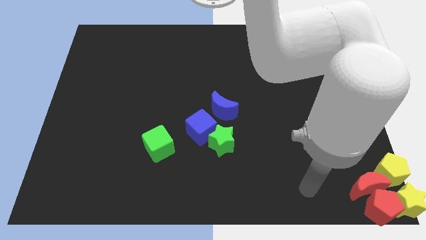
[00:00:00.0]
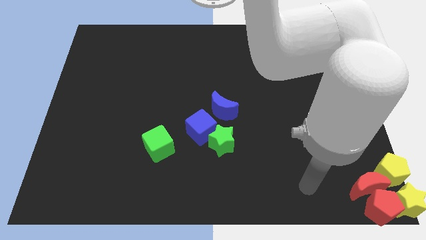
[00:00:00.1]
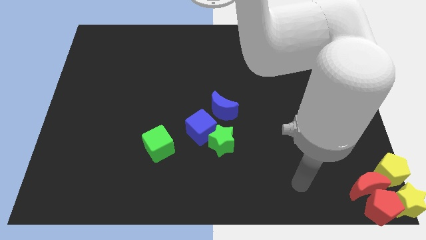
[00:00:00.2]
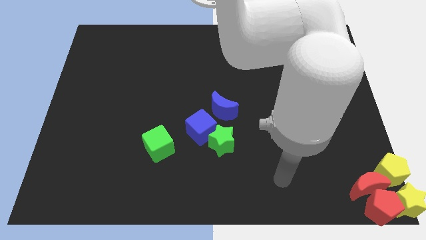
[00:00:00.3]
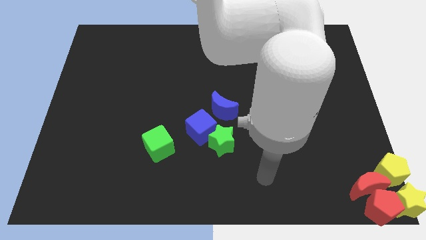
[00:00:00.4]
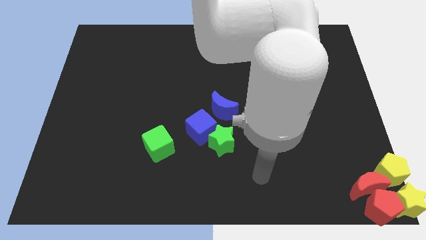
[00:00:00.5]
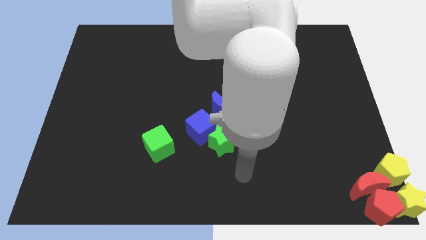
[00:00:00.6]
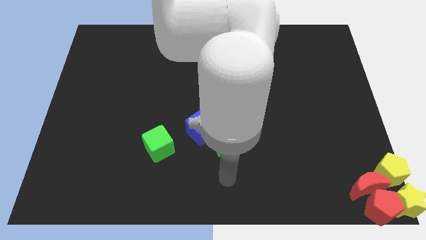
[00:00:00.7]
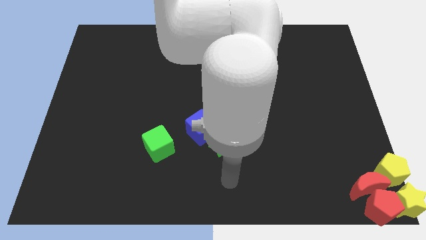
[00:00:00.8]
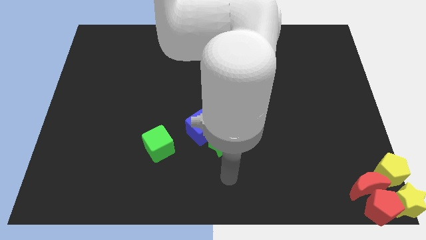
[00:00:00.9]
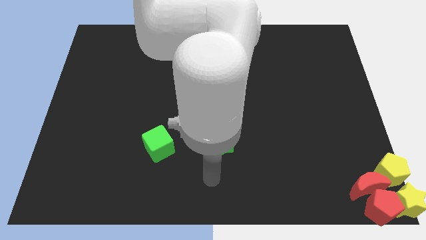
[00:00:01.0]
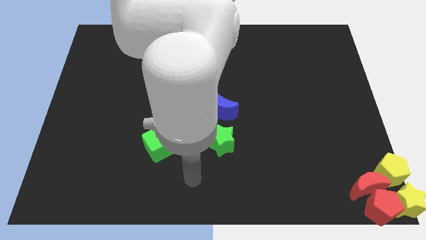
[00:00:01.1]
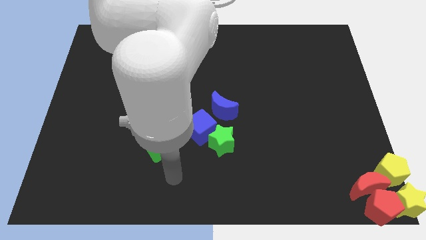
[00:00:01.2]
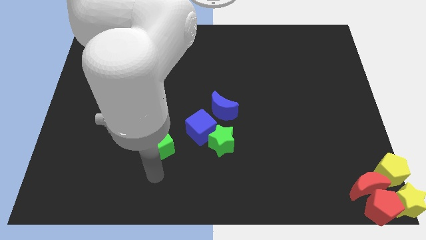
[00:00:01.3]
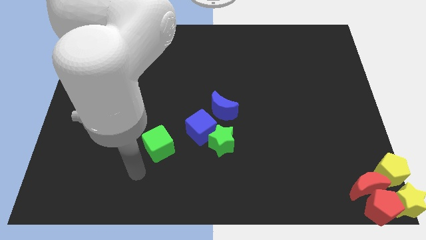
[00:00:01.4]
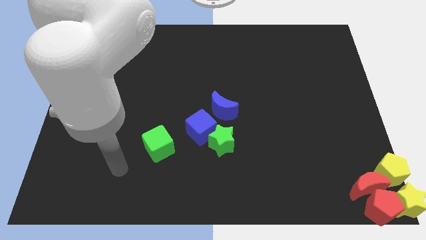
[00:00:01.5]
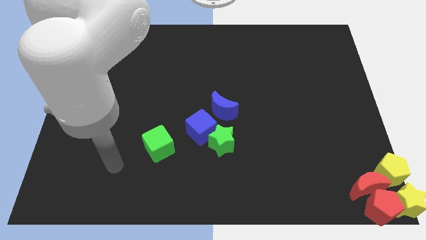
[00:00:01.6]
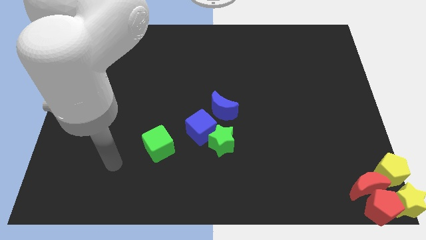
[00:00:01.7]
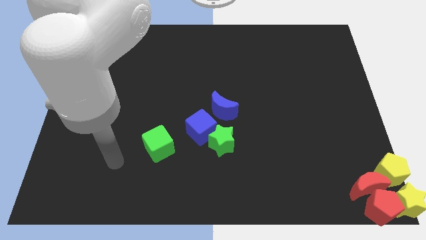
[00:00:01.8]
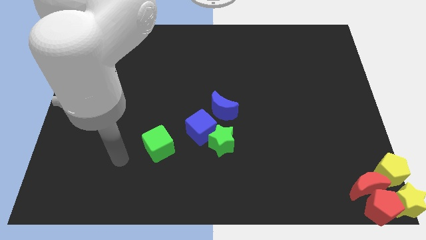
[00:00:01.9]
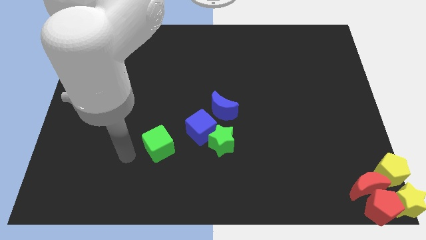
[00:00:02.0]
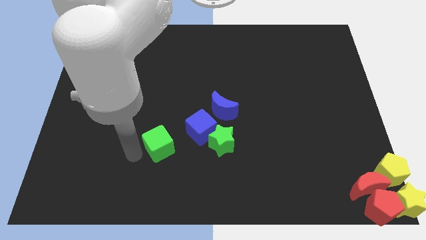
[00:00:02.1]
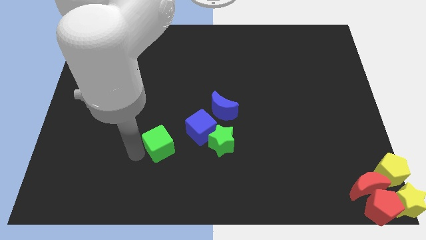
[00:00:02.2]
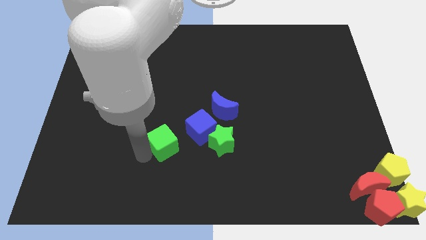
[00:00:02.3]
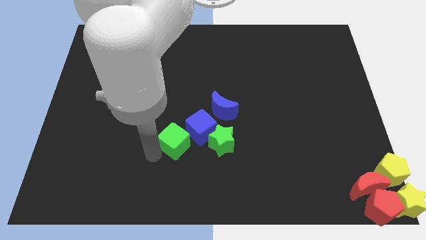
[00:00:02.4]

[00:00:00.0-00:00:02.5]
push the green cube towards the blue cube

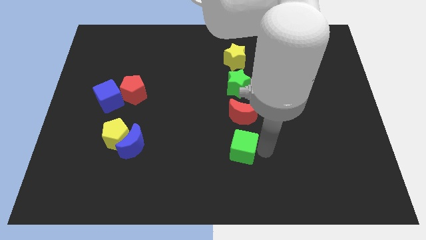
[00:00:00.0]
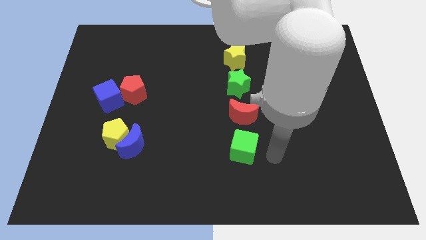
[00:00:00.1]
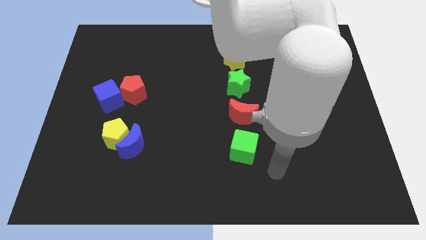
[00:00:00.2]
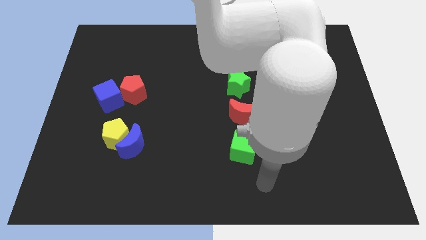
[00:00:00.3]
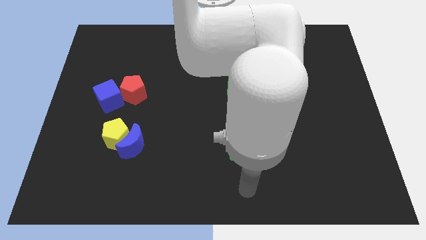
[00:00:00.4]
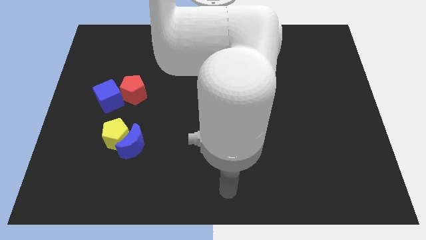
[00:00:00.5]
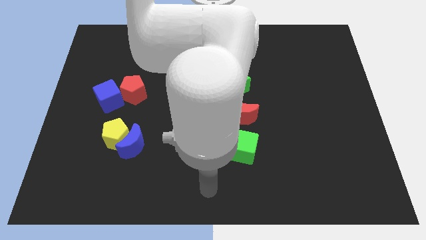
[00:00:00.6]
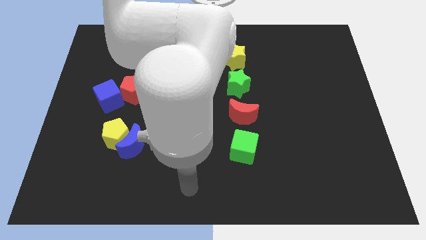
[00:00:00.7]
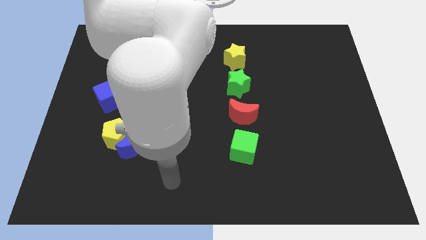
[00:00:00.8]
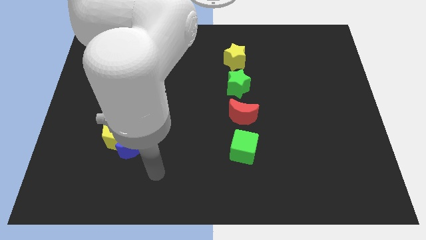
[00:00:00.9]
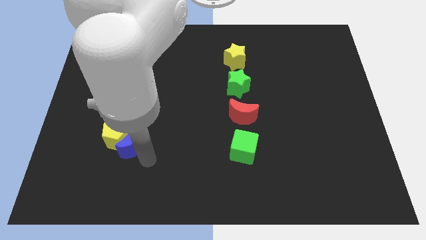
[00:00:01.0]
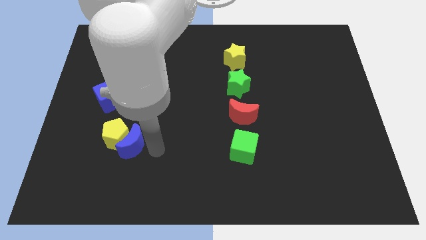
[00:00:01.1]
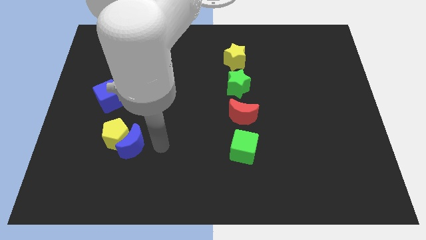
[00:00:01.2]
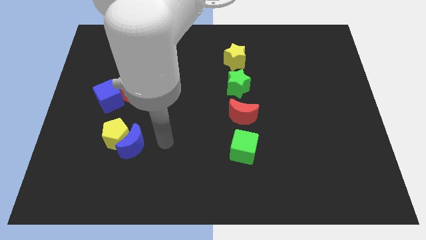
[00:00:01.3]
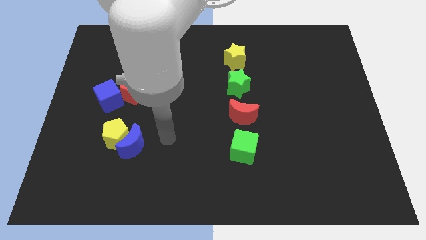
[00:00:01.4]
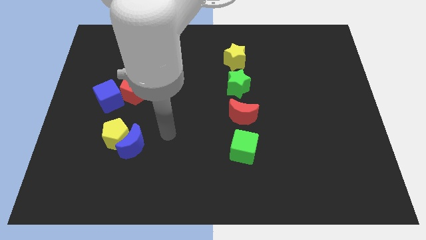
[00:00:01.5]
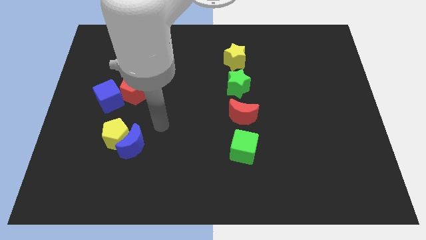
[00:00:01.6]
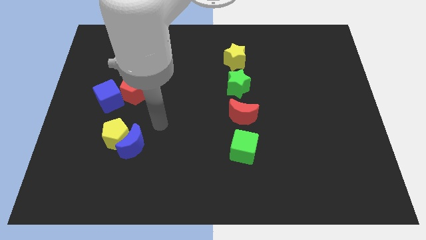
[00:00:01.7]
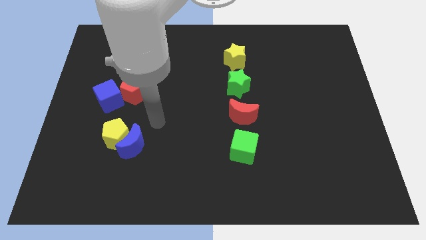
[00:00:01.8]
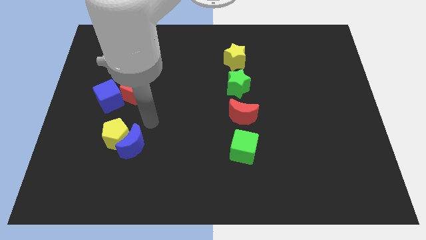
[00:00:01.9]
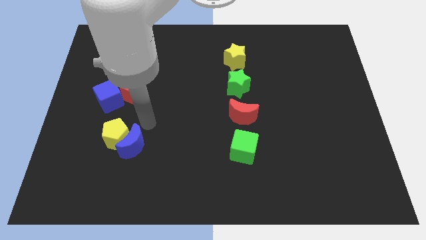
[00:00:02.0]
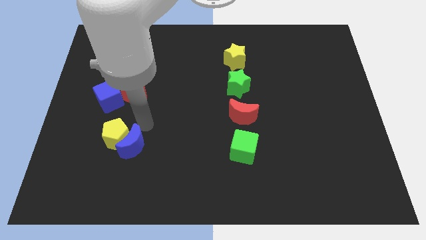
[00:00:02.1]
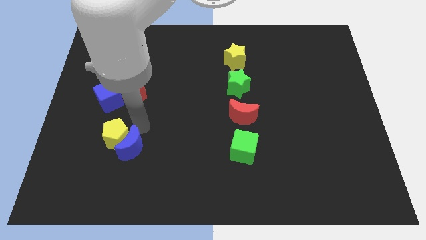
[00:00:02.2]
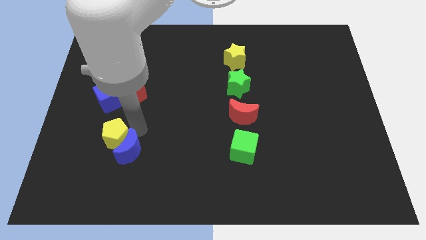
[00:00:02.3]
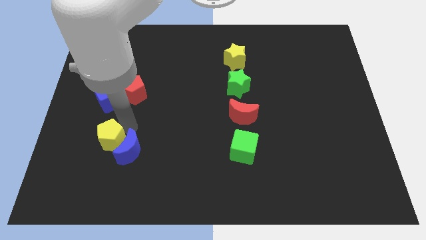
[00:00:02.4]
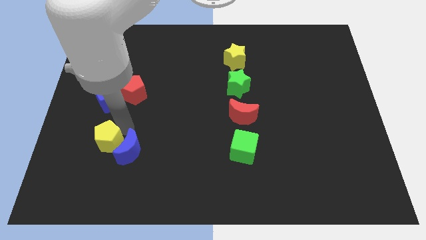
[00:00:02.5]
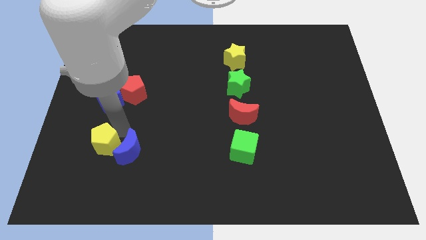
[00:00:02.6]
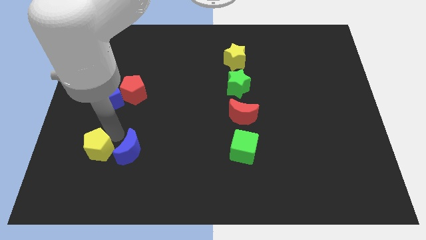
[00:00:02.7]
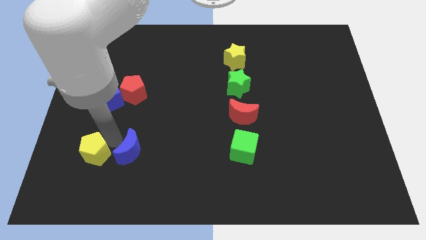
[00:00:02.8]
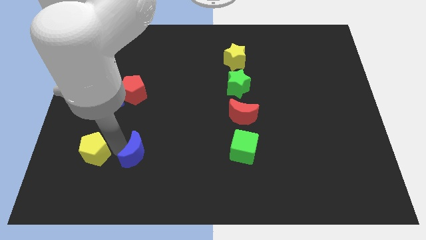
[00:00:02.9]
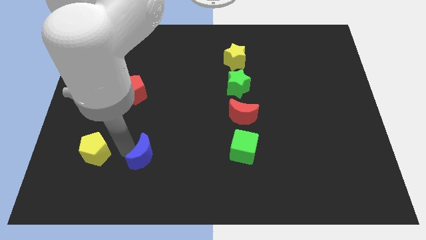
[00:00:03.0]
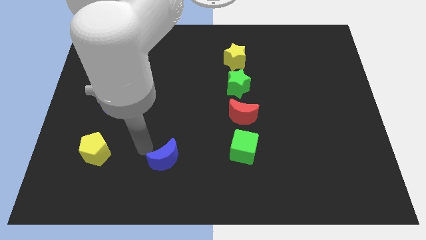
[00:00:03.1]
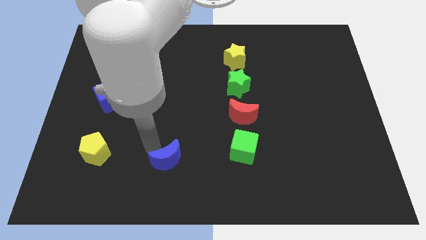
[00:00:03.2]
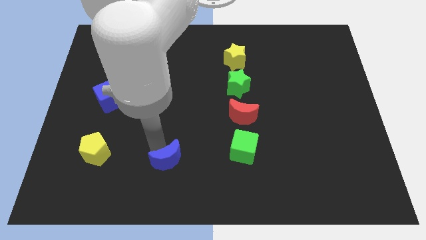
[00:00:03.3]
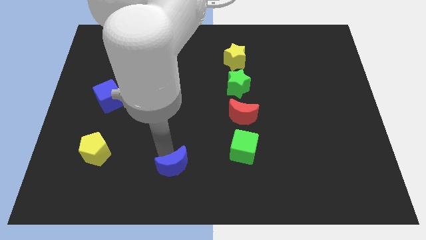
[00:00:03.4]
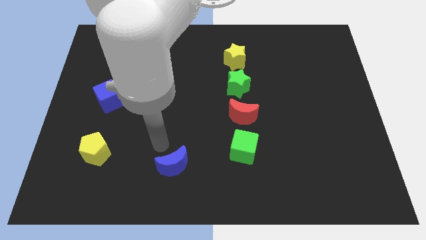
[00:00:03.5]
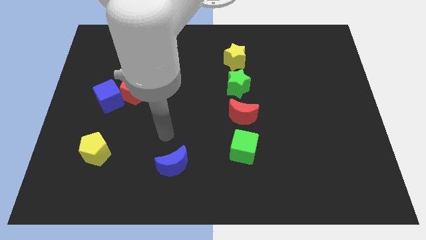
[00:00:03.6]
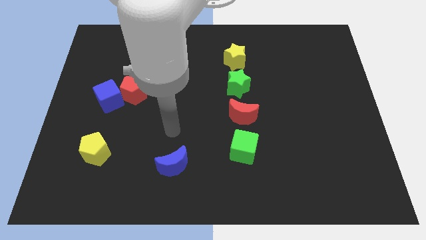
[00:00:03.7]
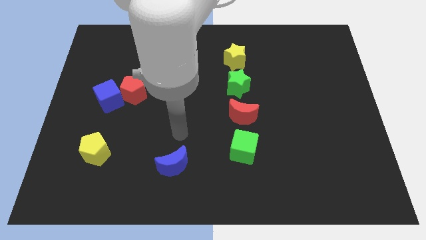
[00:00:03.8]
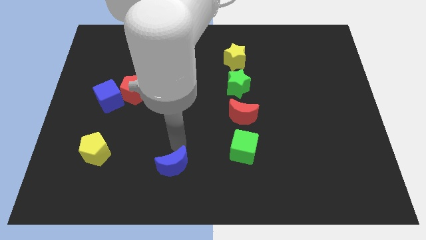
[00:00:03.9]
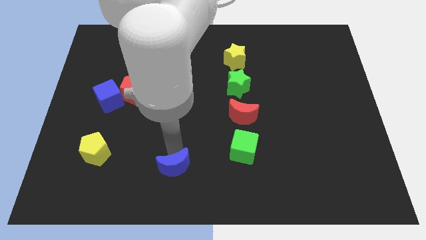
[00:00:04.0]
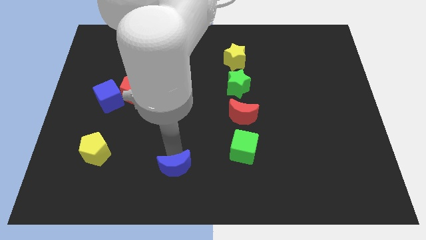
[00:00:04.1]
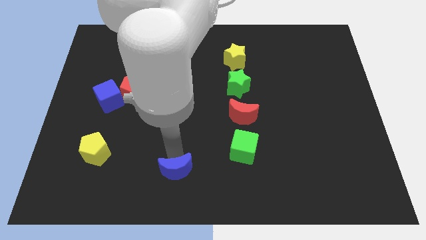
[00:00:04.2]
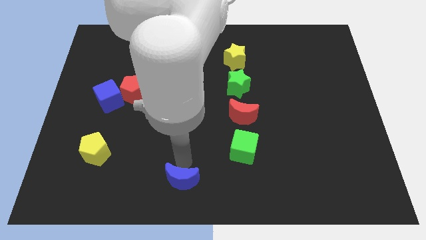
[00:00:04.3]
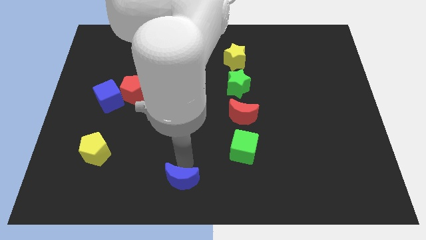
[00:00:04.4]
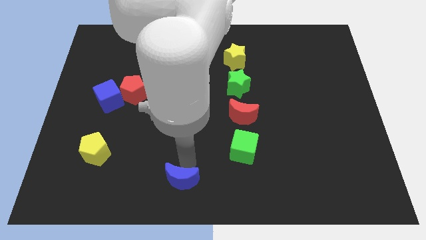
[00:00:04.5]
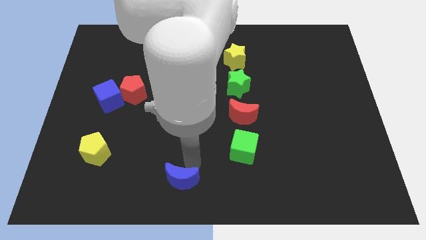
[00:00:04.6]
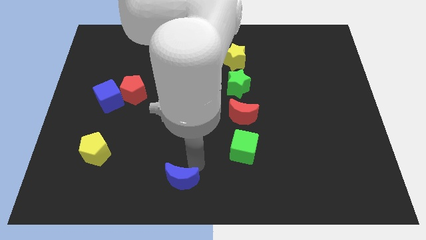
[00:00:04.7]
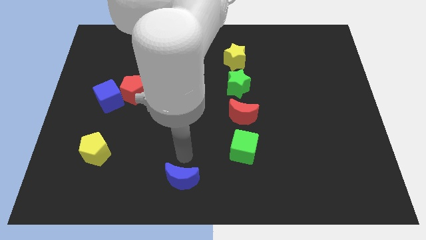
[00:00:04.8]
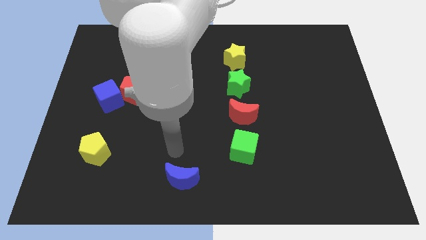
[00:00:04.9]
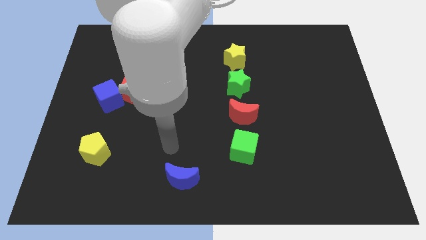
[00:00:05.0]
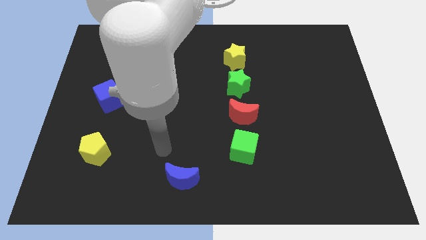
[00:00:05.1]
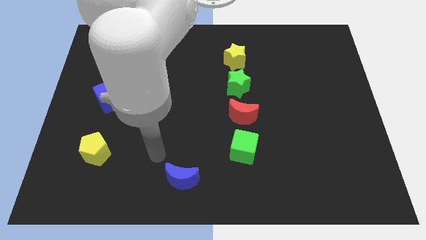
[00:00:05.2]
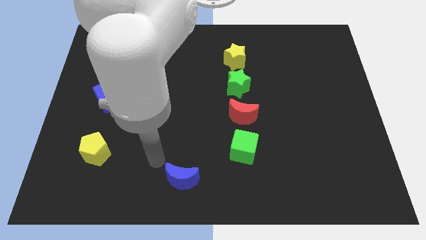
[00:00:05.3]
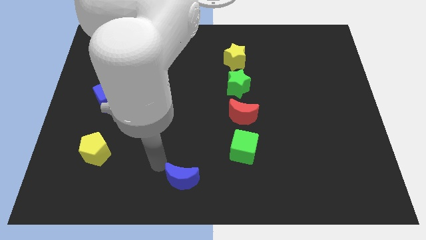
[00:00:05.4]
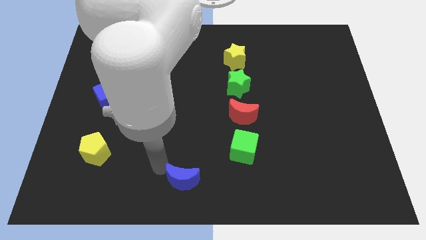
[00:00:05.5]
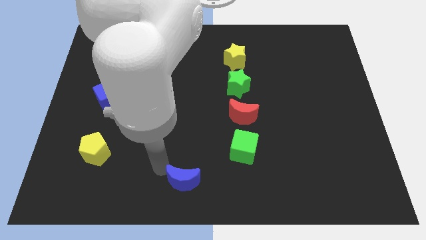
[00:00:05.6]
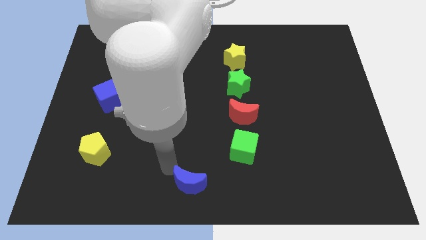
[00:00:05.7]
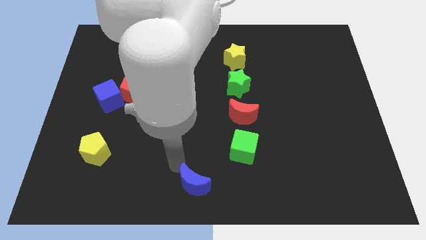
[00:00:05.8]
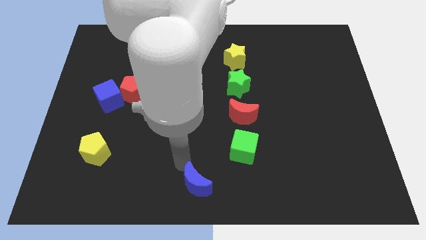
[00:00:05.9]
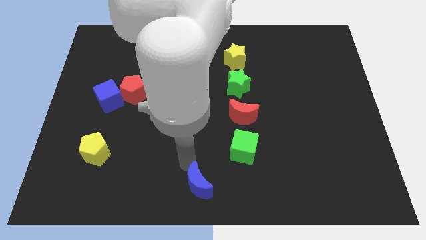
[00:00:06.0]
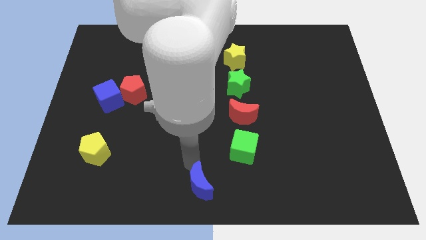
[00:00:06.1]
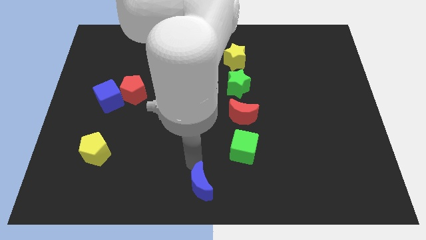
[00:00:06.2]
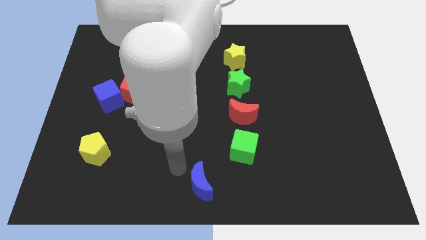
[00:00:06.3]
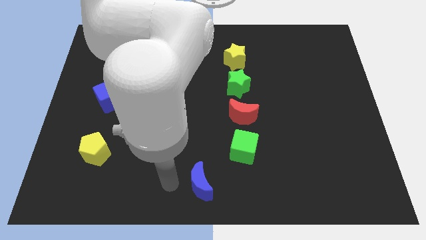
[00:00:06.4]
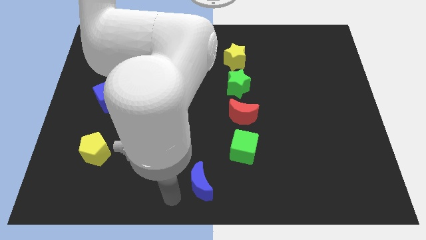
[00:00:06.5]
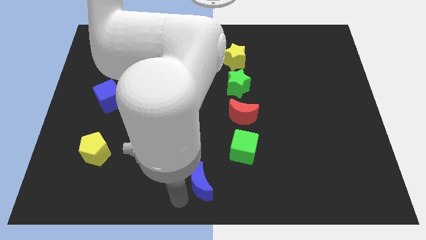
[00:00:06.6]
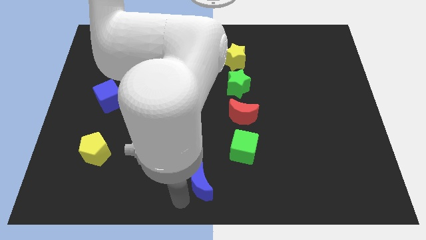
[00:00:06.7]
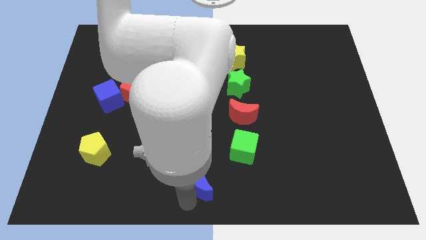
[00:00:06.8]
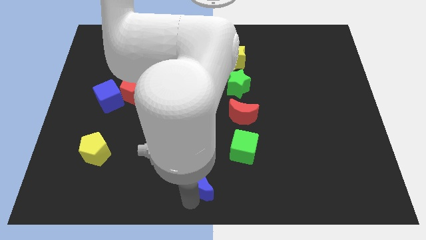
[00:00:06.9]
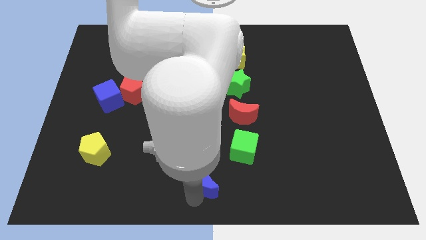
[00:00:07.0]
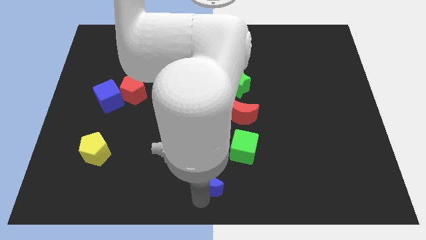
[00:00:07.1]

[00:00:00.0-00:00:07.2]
move the blue moon to the green cube
